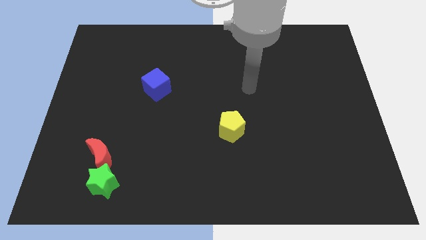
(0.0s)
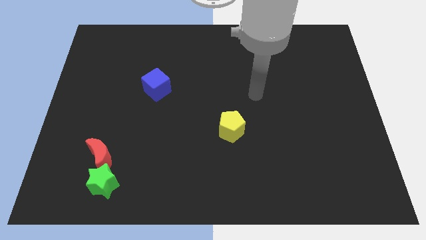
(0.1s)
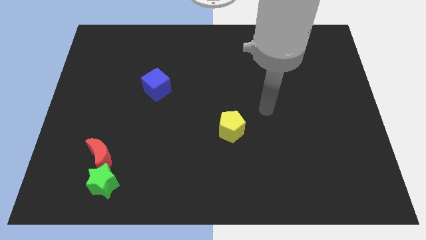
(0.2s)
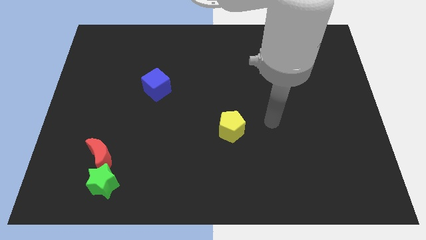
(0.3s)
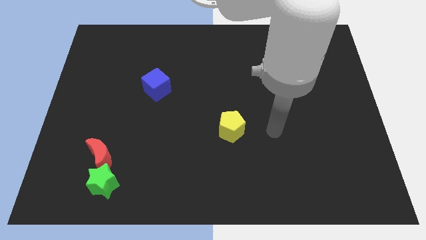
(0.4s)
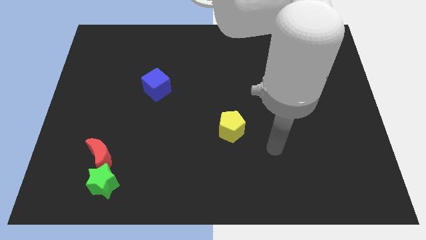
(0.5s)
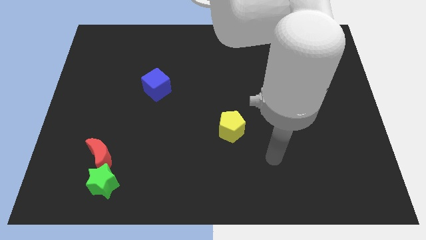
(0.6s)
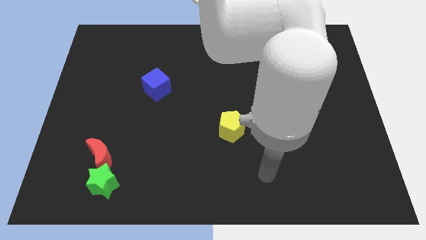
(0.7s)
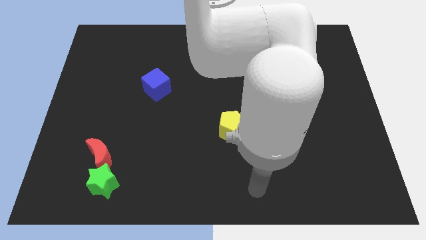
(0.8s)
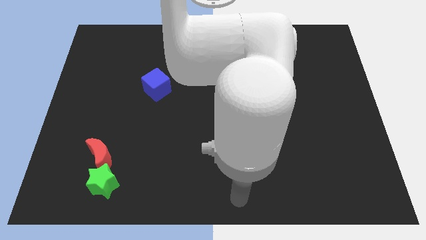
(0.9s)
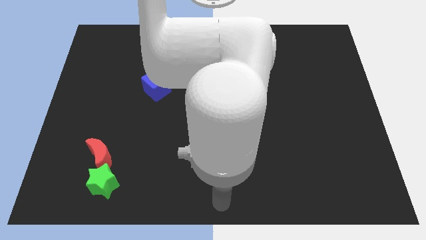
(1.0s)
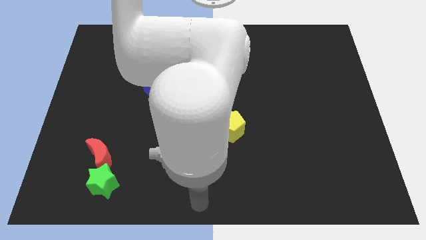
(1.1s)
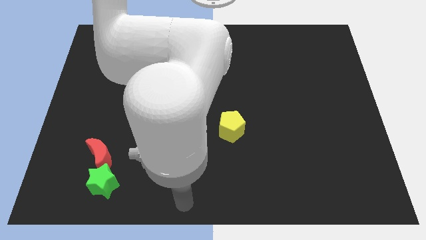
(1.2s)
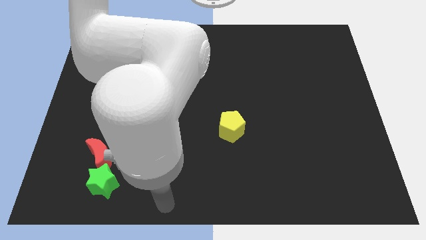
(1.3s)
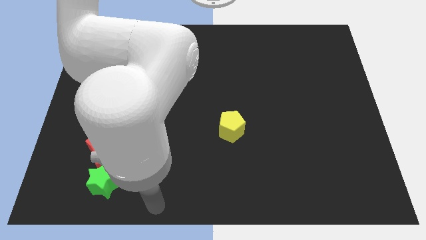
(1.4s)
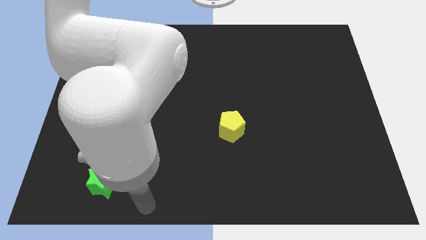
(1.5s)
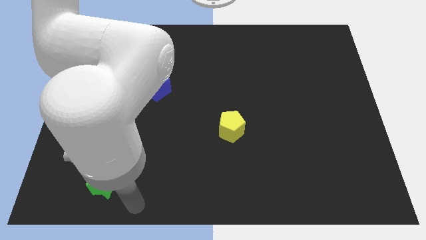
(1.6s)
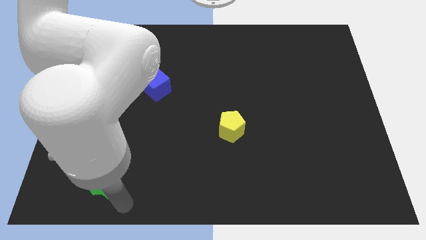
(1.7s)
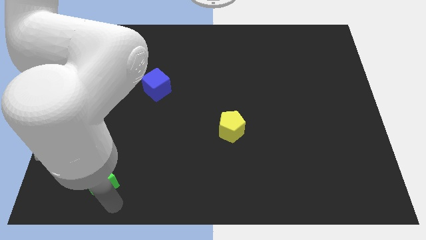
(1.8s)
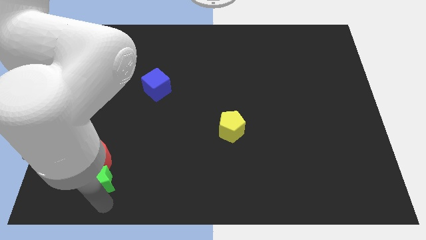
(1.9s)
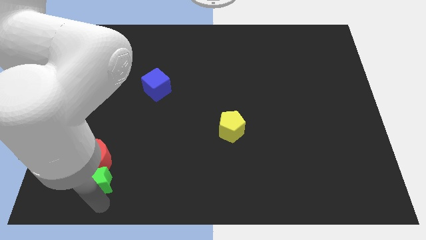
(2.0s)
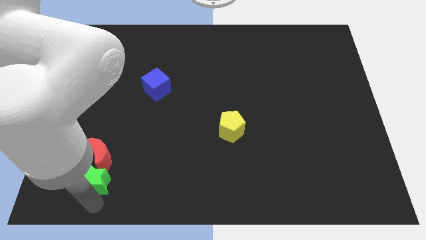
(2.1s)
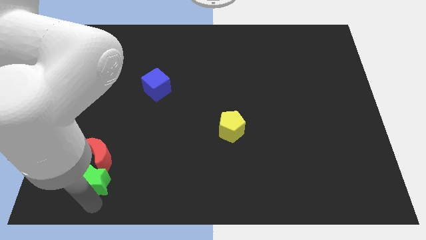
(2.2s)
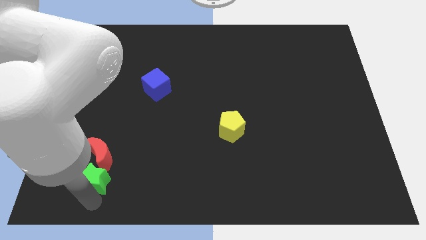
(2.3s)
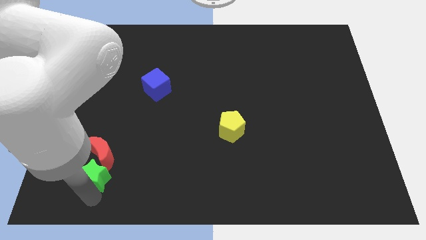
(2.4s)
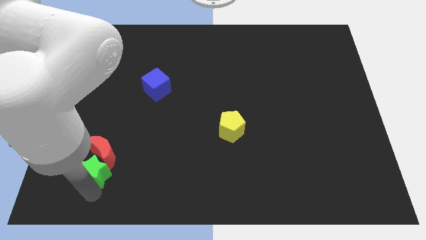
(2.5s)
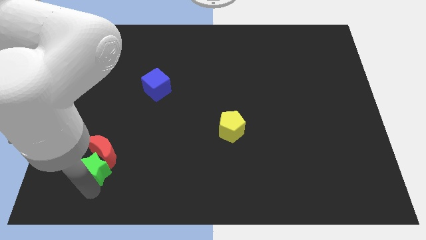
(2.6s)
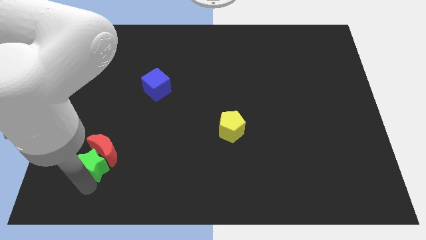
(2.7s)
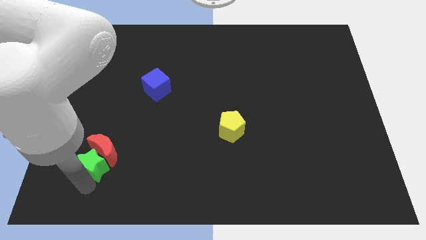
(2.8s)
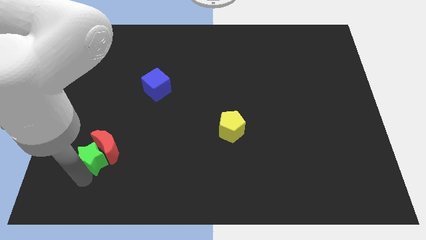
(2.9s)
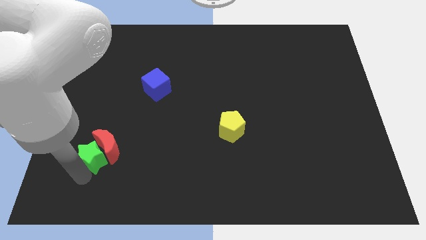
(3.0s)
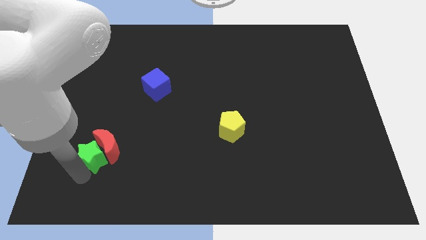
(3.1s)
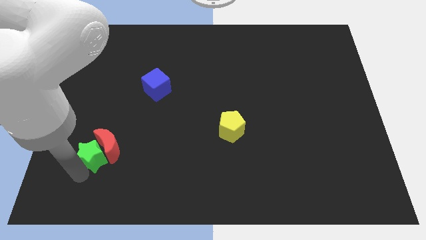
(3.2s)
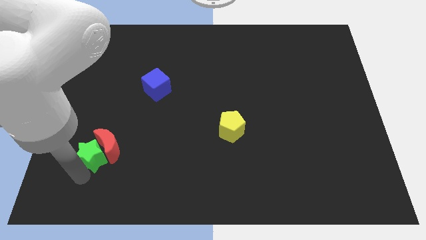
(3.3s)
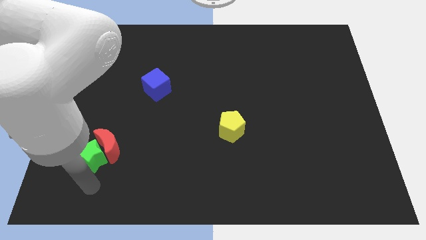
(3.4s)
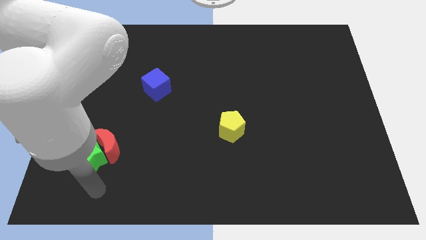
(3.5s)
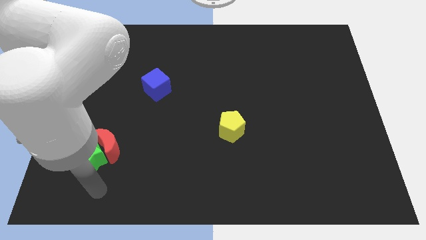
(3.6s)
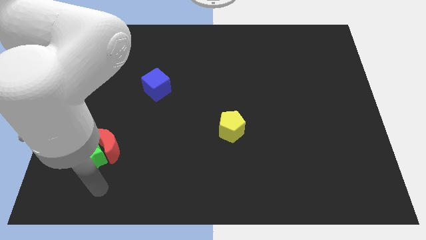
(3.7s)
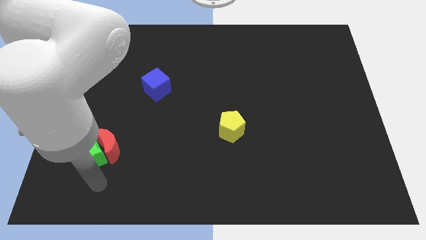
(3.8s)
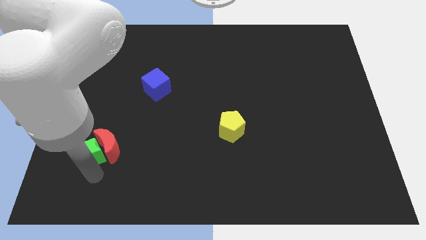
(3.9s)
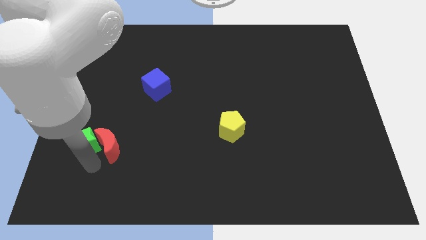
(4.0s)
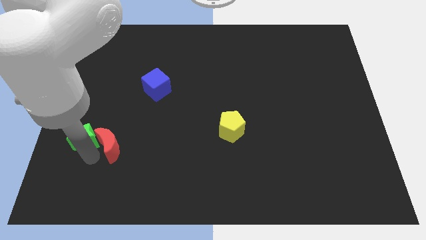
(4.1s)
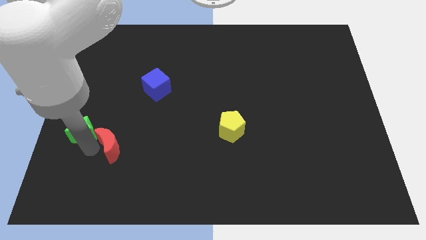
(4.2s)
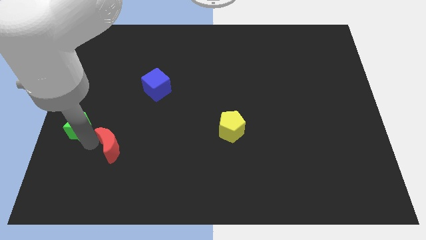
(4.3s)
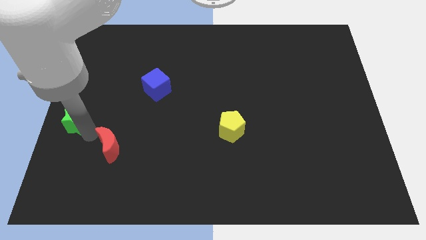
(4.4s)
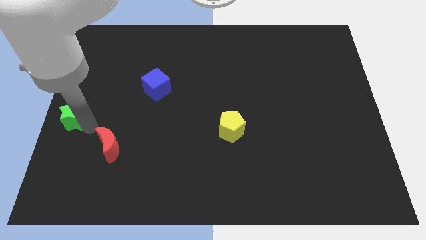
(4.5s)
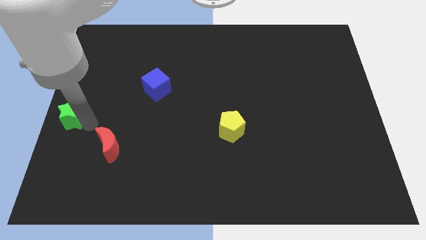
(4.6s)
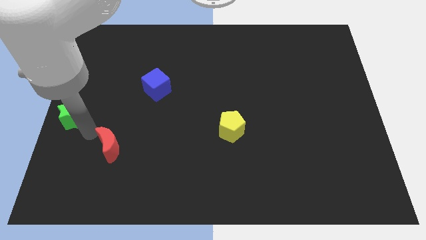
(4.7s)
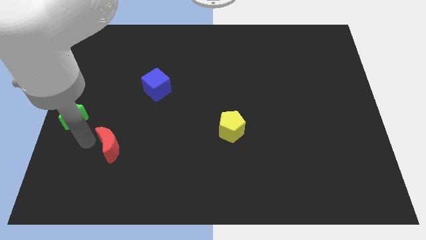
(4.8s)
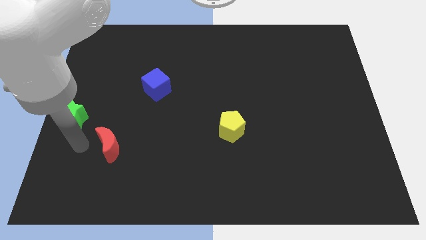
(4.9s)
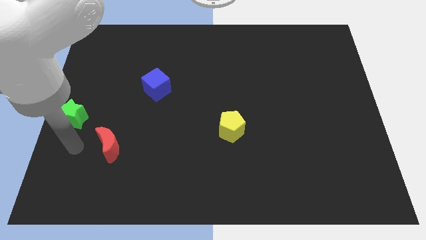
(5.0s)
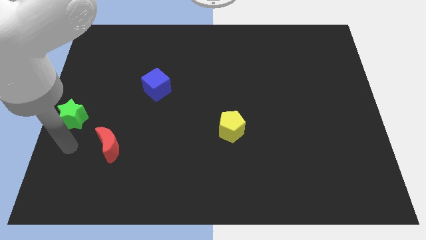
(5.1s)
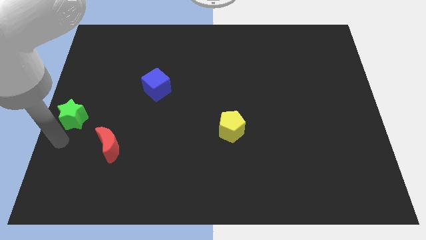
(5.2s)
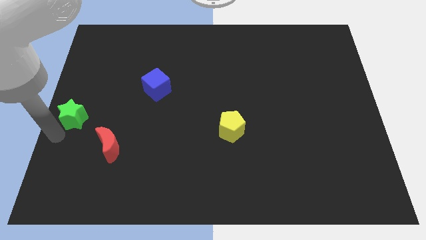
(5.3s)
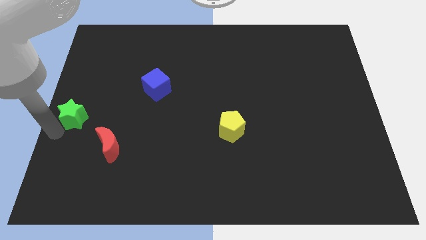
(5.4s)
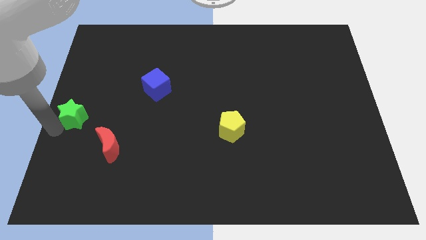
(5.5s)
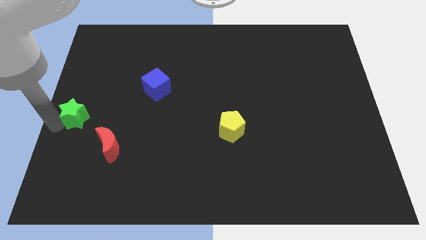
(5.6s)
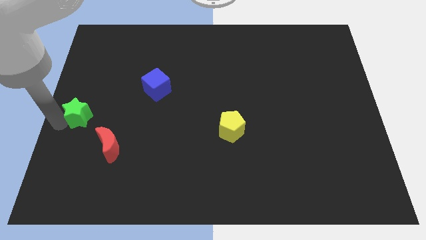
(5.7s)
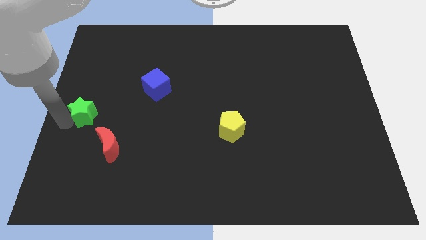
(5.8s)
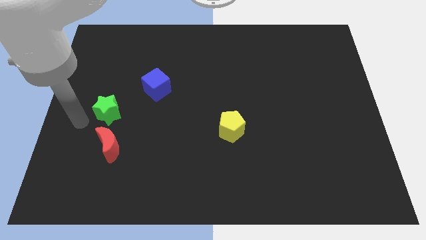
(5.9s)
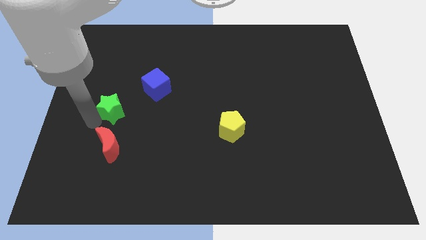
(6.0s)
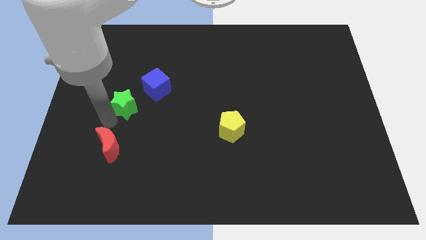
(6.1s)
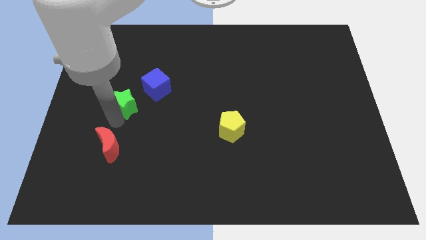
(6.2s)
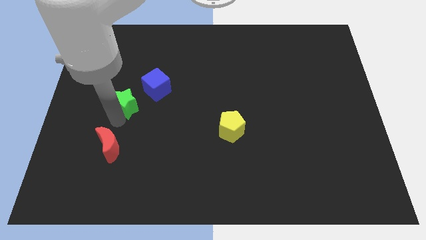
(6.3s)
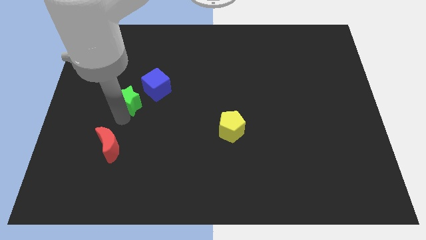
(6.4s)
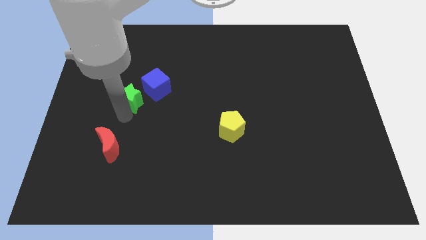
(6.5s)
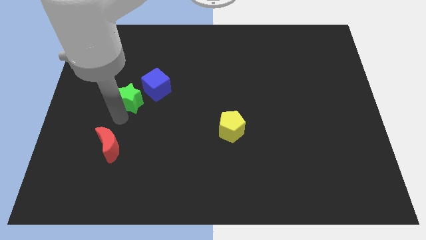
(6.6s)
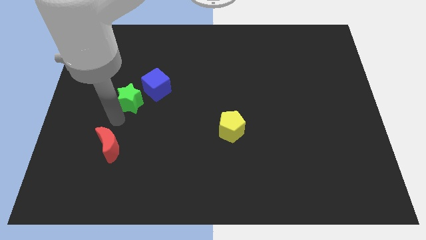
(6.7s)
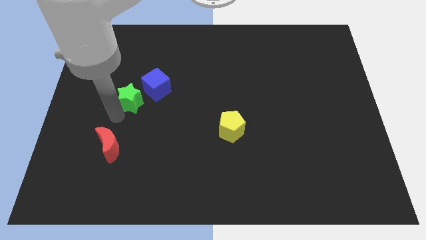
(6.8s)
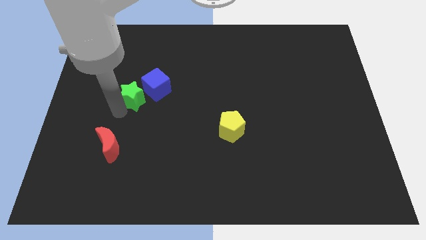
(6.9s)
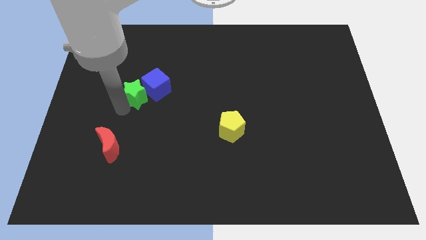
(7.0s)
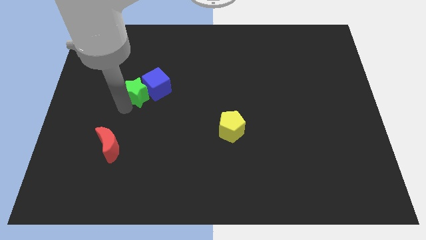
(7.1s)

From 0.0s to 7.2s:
push the star next to the blue cube

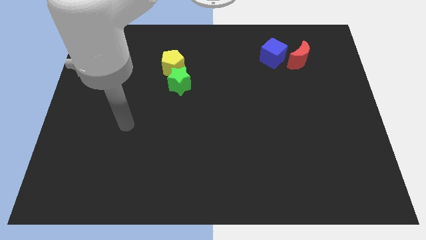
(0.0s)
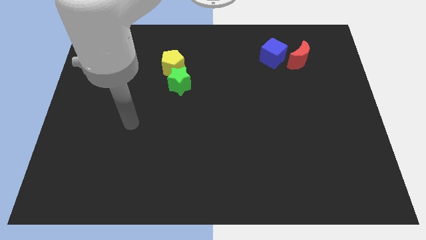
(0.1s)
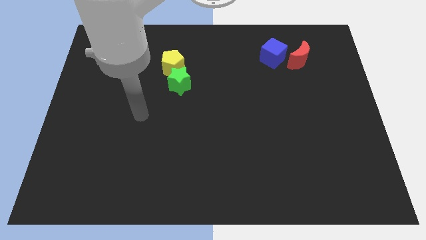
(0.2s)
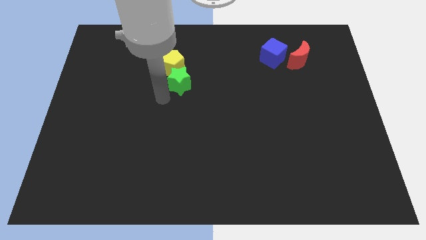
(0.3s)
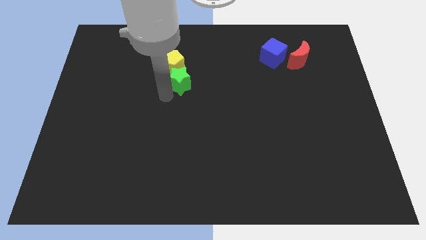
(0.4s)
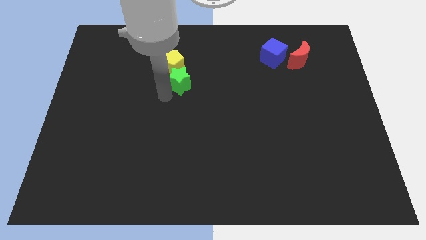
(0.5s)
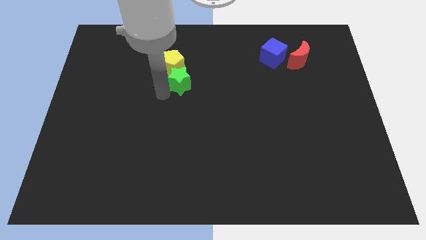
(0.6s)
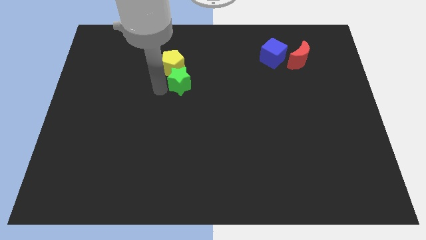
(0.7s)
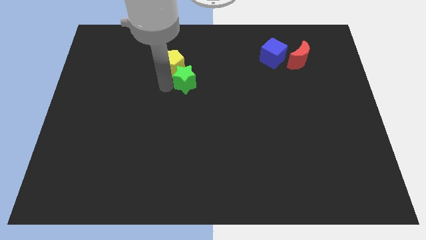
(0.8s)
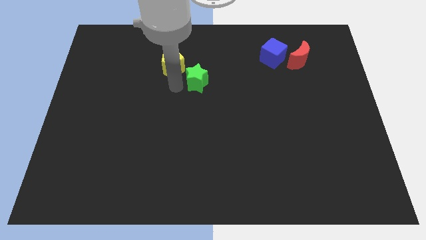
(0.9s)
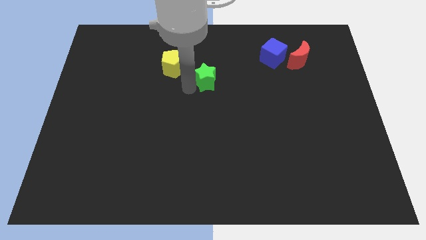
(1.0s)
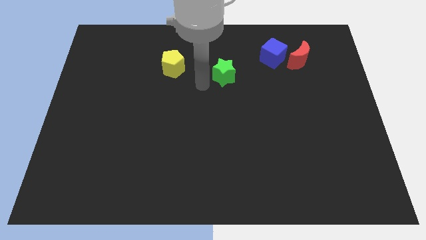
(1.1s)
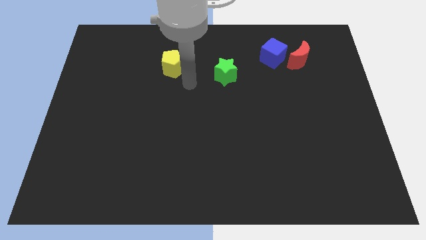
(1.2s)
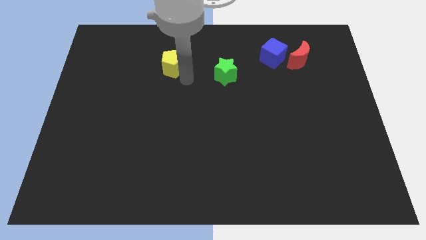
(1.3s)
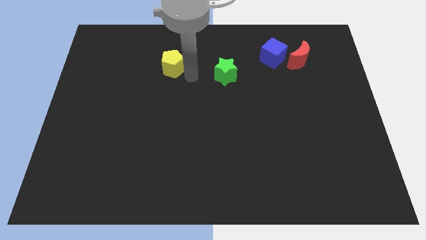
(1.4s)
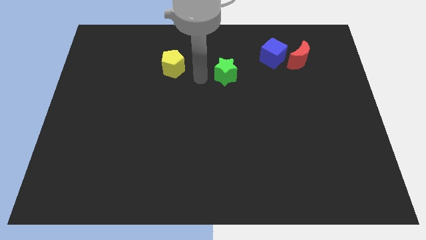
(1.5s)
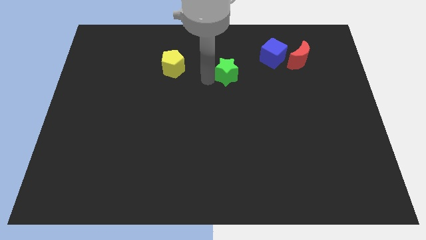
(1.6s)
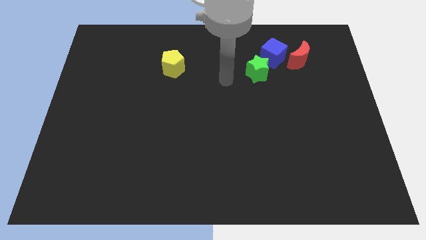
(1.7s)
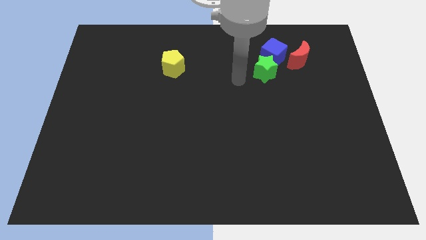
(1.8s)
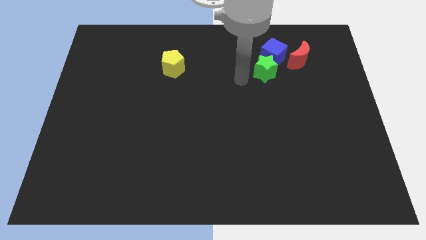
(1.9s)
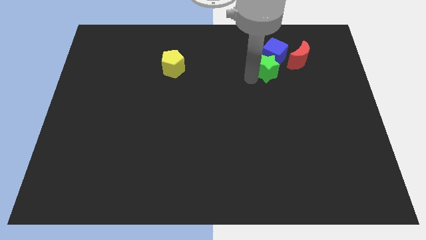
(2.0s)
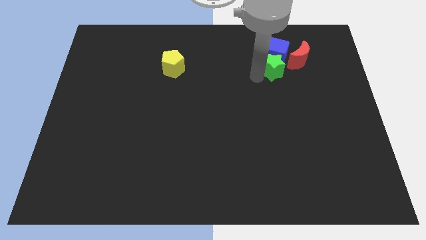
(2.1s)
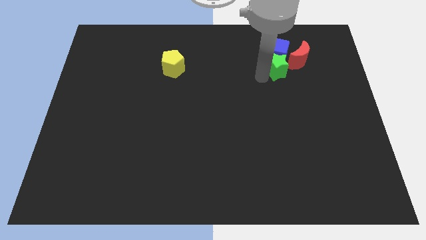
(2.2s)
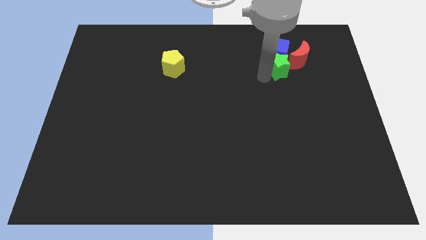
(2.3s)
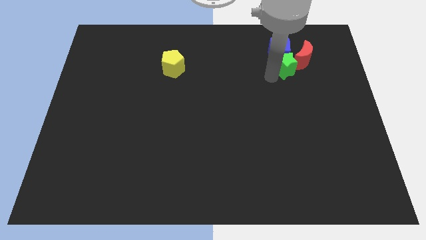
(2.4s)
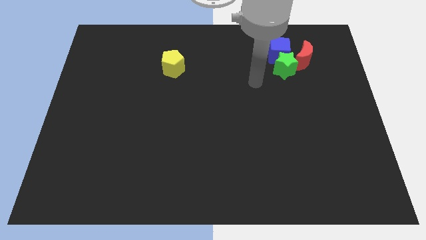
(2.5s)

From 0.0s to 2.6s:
push the green block next to the red block
